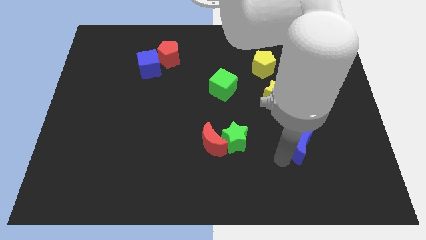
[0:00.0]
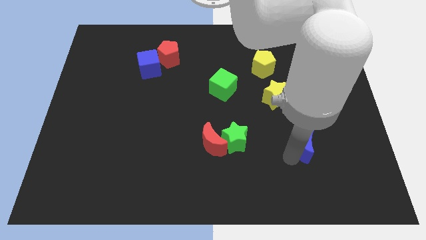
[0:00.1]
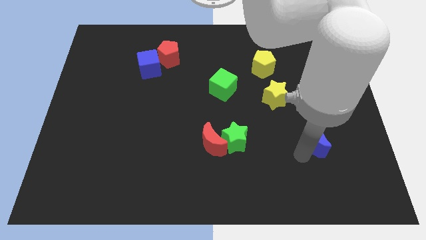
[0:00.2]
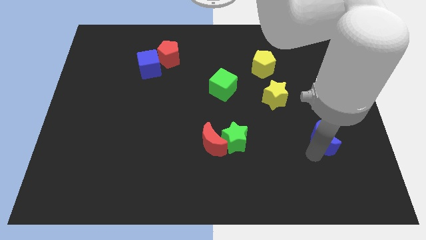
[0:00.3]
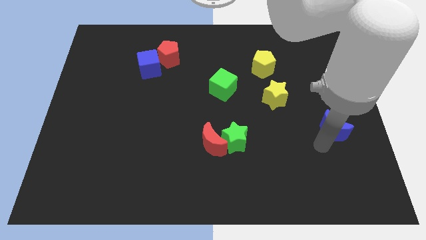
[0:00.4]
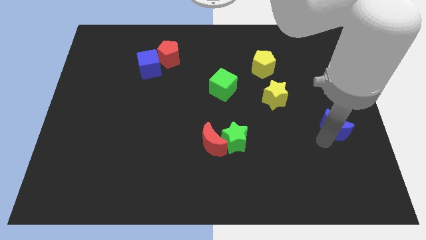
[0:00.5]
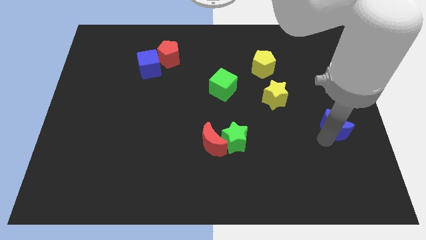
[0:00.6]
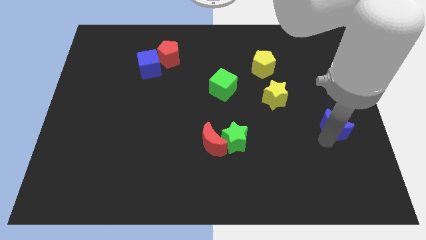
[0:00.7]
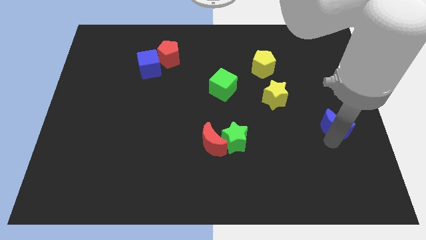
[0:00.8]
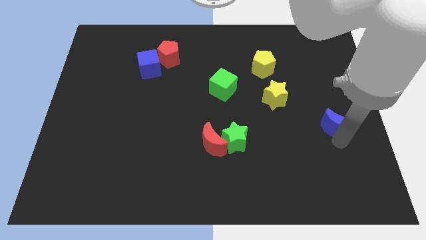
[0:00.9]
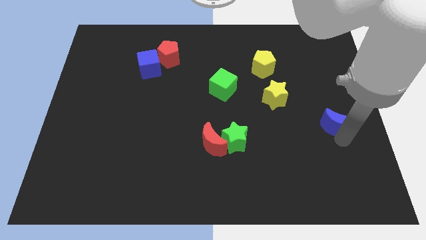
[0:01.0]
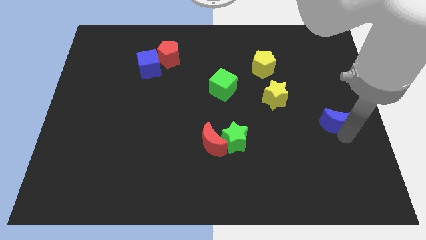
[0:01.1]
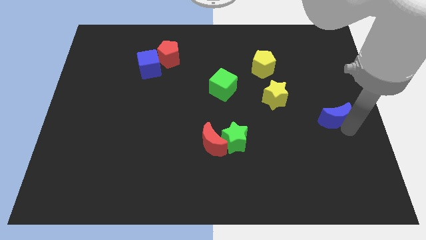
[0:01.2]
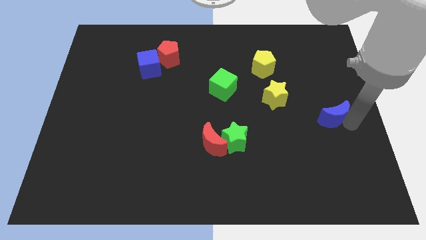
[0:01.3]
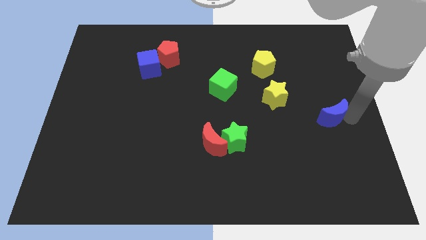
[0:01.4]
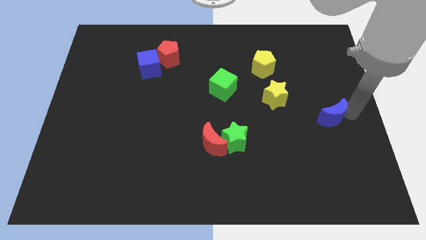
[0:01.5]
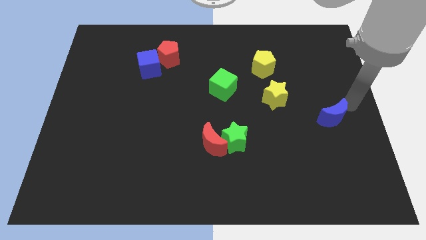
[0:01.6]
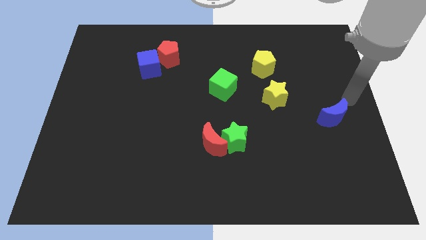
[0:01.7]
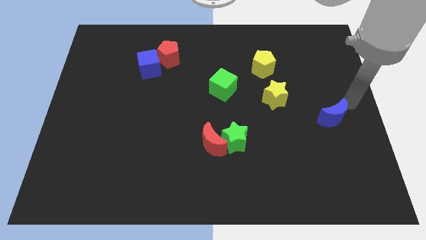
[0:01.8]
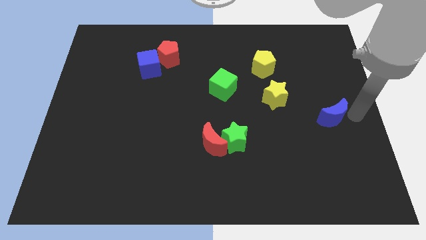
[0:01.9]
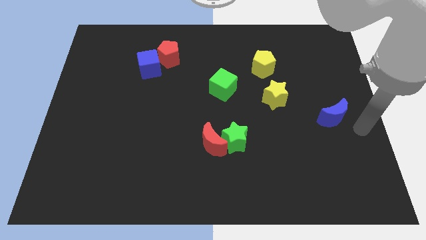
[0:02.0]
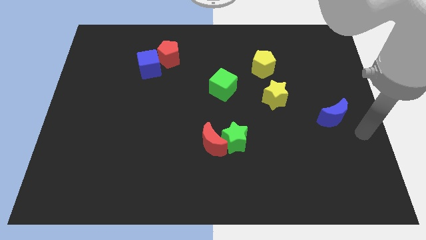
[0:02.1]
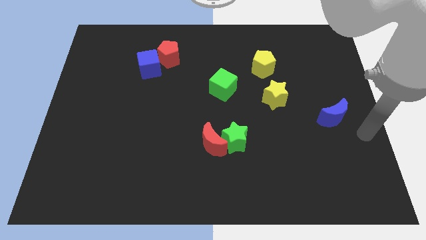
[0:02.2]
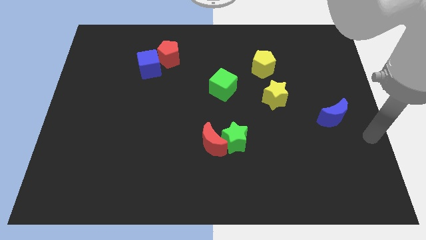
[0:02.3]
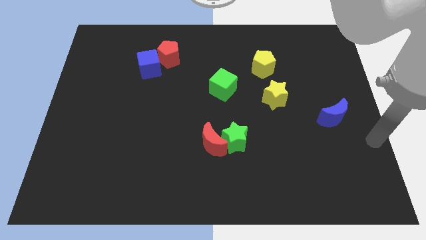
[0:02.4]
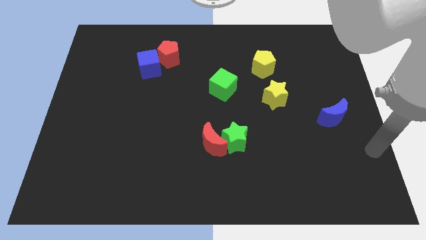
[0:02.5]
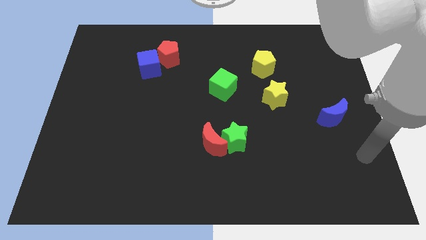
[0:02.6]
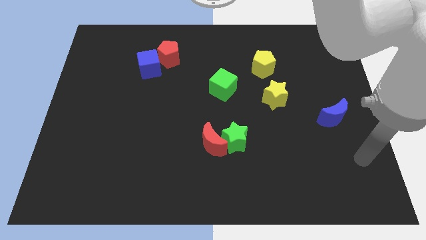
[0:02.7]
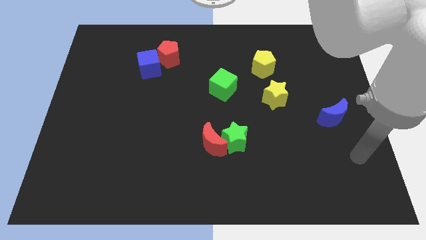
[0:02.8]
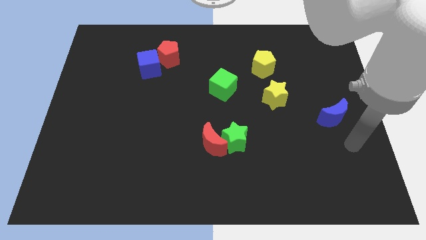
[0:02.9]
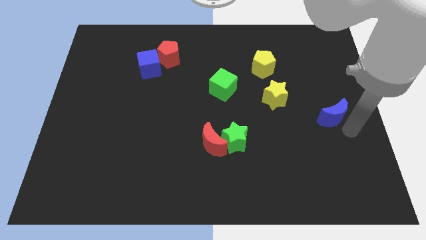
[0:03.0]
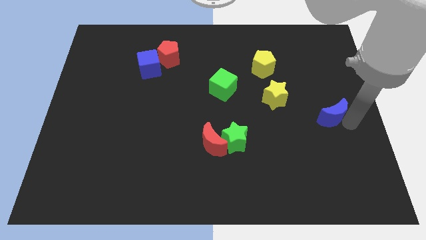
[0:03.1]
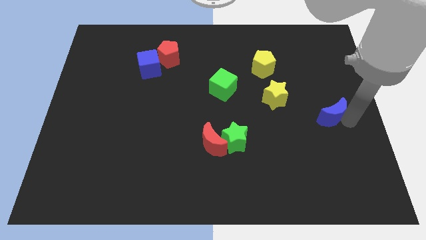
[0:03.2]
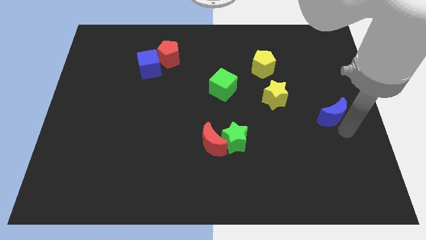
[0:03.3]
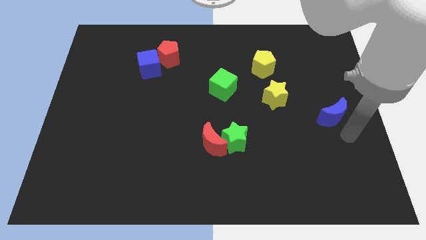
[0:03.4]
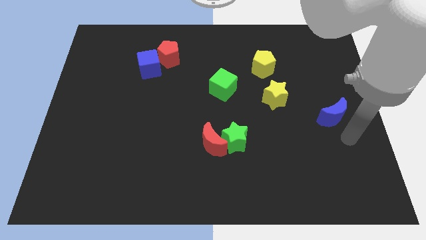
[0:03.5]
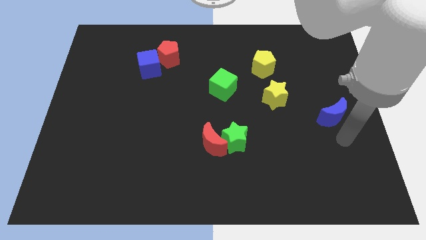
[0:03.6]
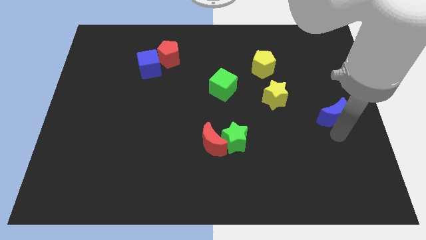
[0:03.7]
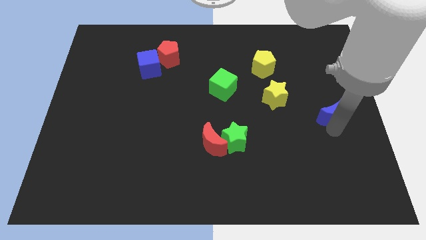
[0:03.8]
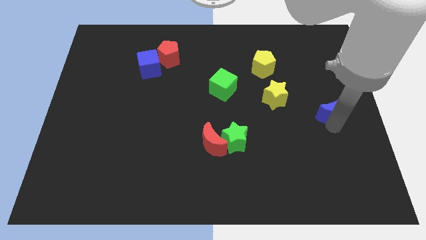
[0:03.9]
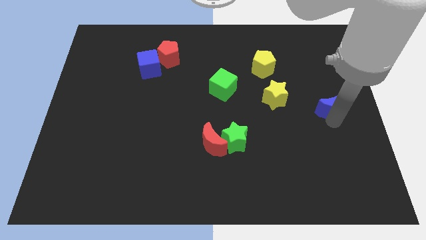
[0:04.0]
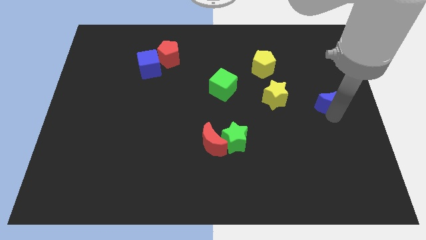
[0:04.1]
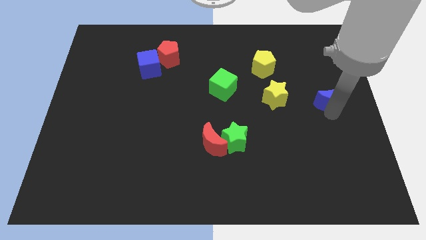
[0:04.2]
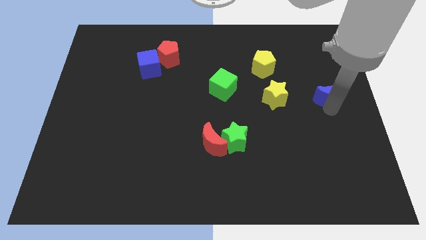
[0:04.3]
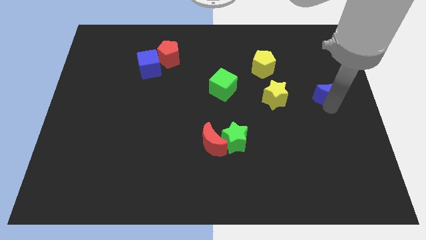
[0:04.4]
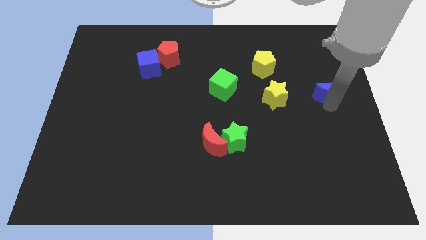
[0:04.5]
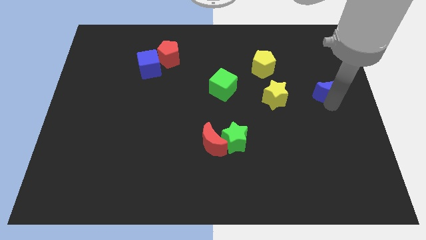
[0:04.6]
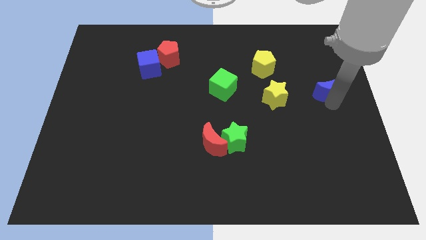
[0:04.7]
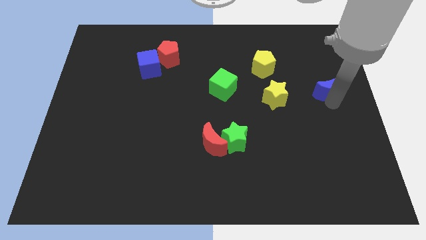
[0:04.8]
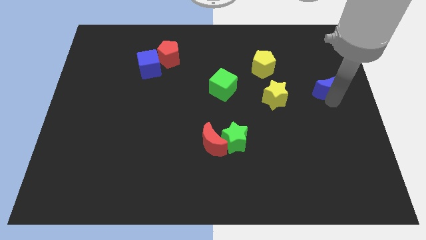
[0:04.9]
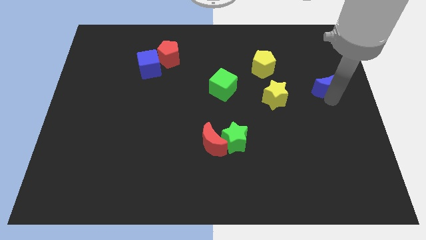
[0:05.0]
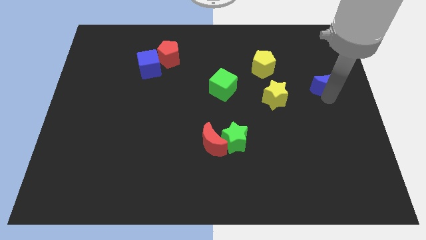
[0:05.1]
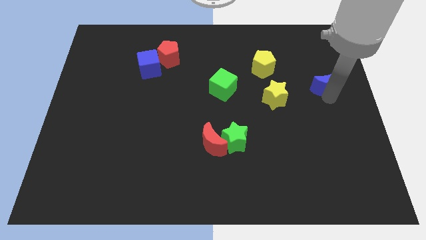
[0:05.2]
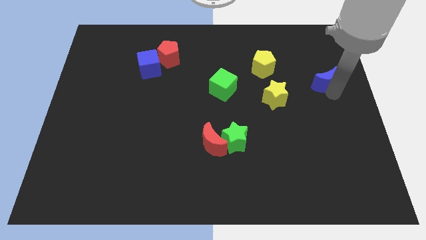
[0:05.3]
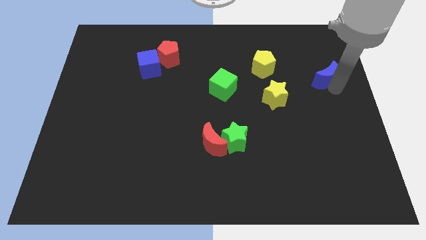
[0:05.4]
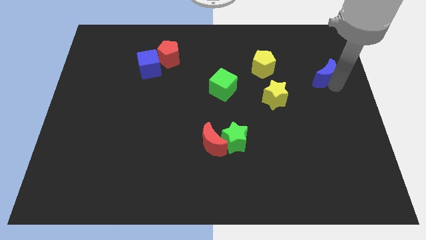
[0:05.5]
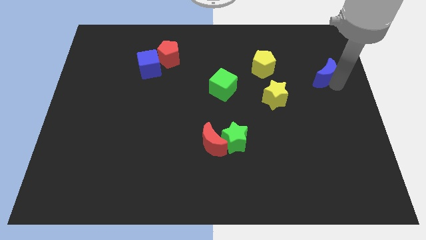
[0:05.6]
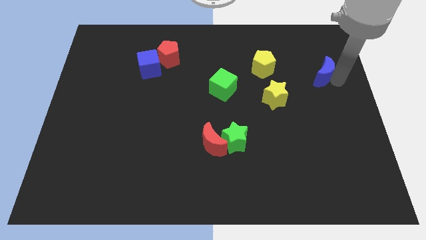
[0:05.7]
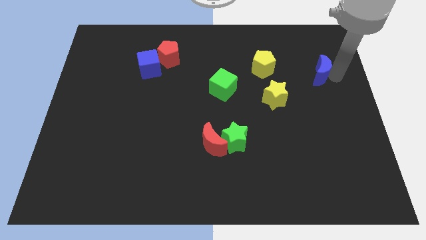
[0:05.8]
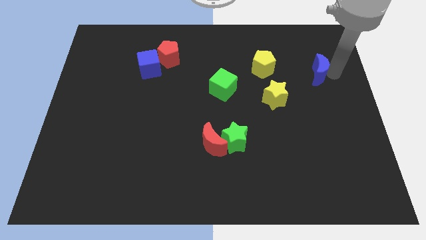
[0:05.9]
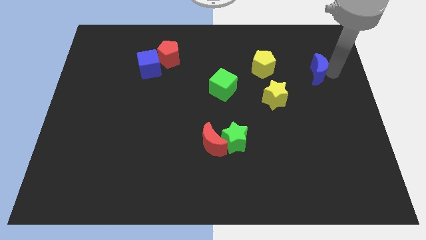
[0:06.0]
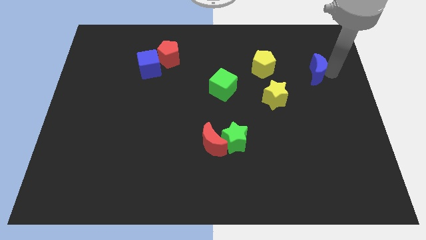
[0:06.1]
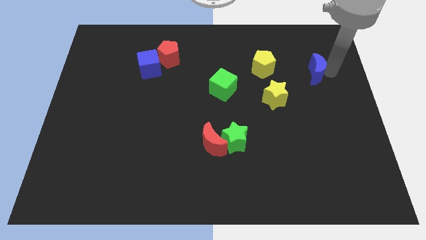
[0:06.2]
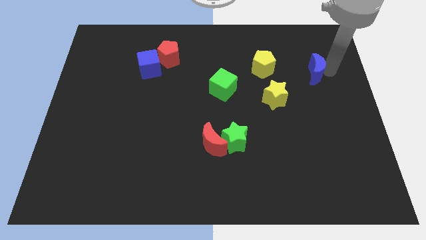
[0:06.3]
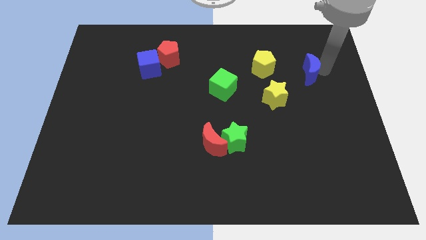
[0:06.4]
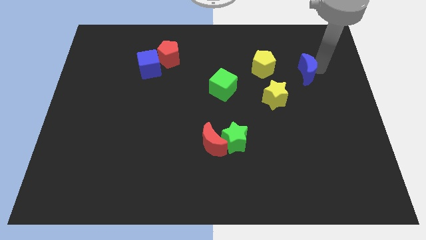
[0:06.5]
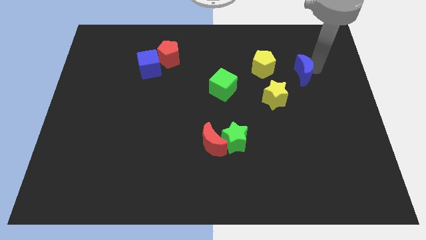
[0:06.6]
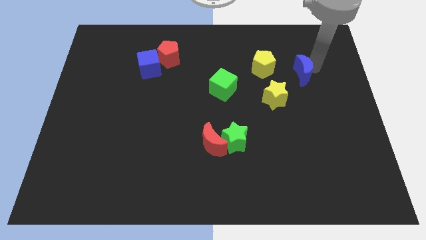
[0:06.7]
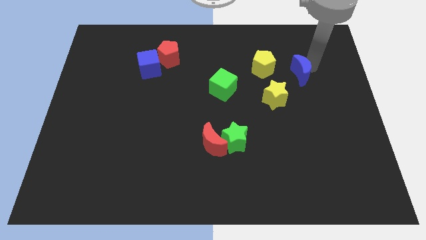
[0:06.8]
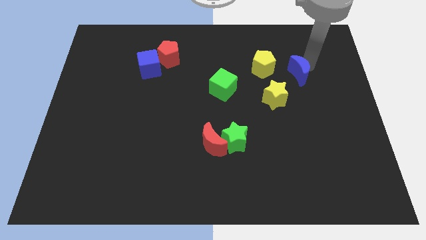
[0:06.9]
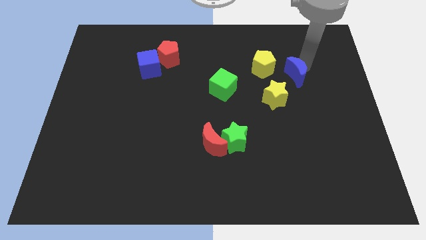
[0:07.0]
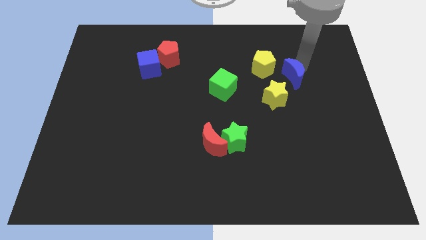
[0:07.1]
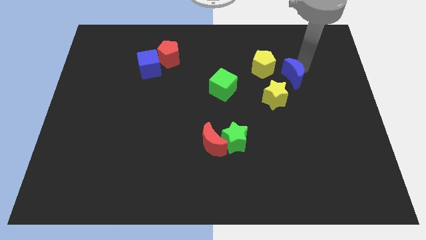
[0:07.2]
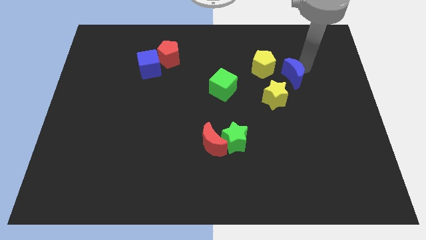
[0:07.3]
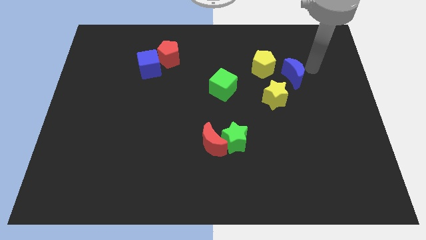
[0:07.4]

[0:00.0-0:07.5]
place the blue moon at the top right side of the yellow star

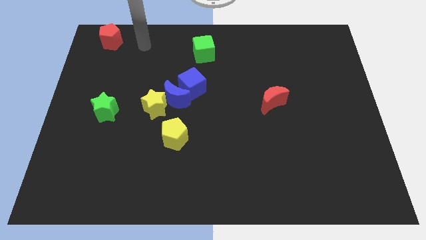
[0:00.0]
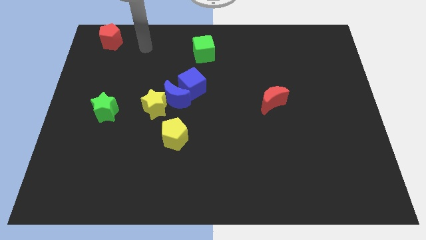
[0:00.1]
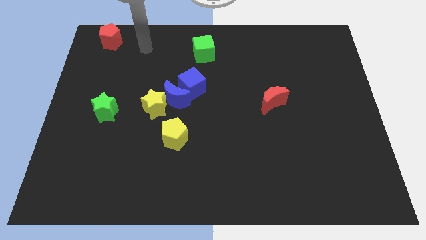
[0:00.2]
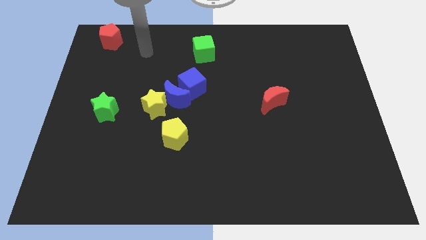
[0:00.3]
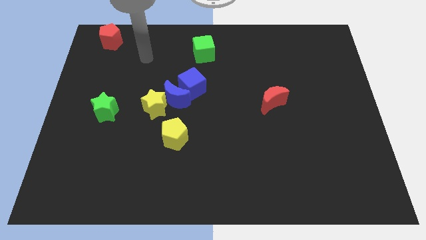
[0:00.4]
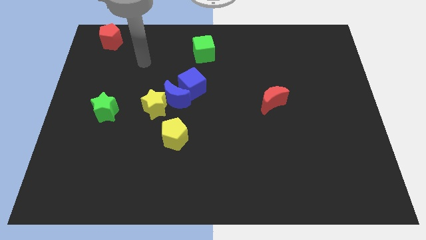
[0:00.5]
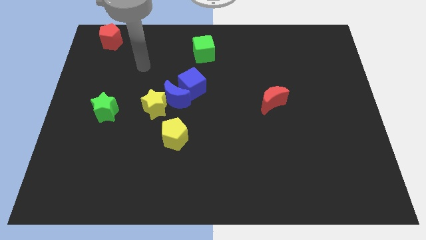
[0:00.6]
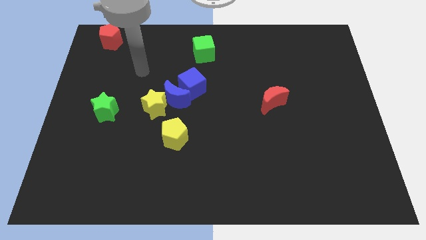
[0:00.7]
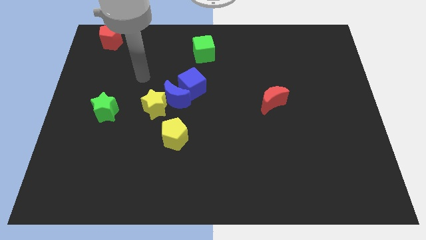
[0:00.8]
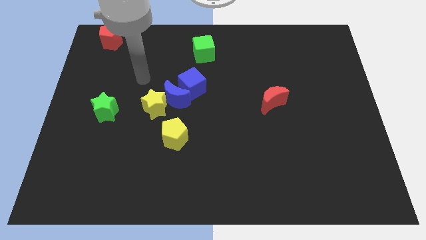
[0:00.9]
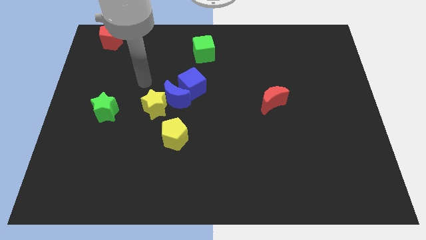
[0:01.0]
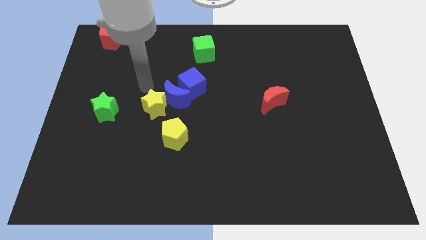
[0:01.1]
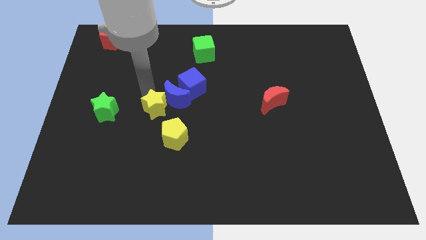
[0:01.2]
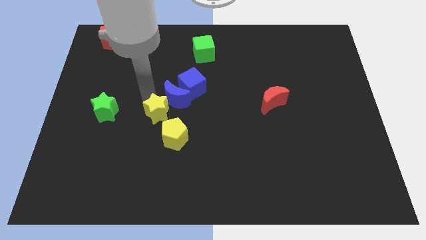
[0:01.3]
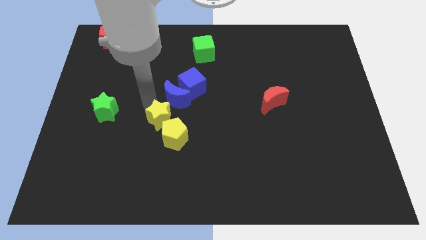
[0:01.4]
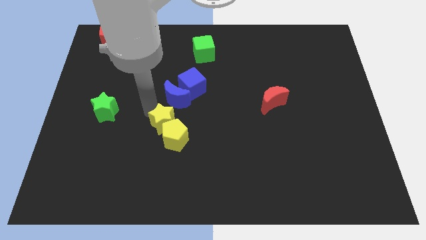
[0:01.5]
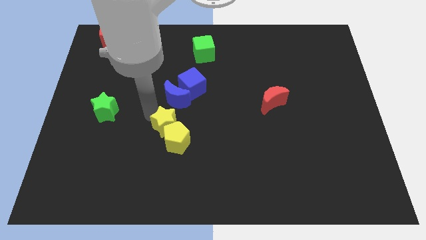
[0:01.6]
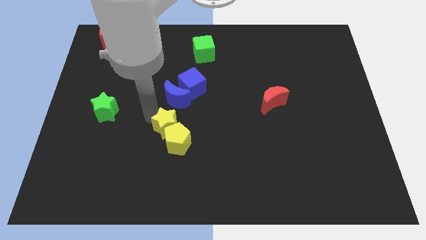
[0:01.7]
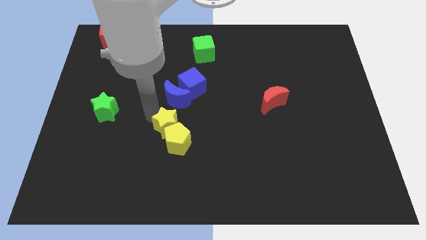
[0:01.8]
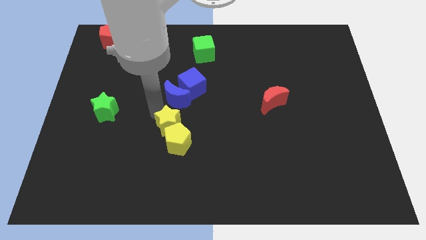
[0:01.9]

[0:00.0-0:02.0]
push the yellow star into yellow pentagon
